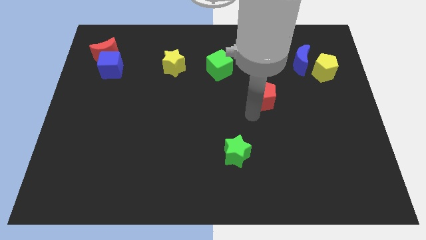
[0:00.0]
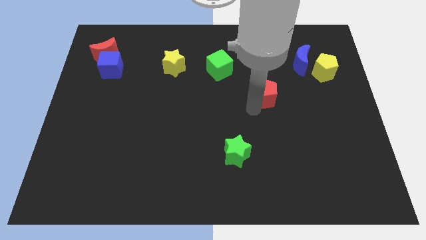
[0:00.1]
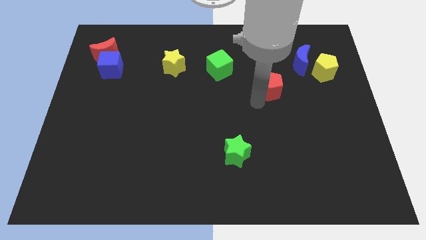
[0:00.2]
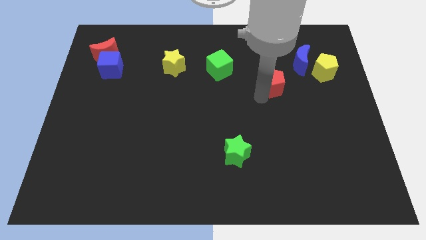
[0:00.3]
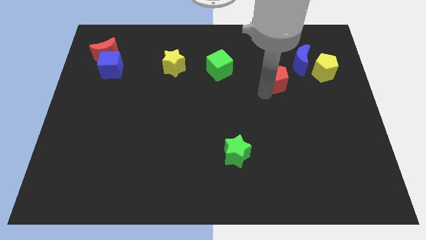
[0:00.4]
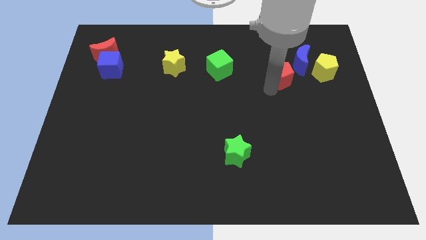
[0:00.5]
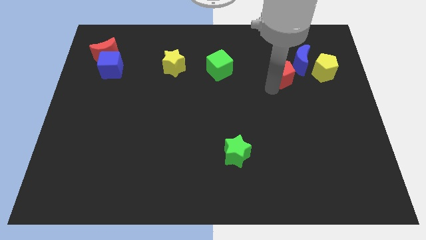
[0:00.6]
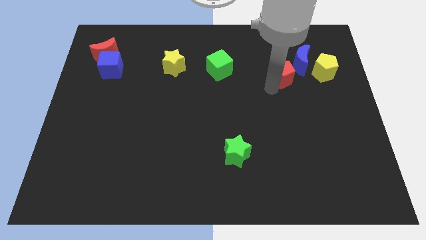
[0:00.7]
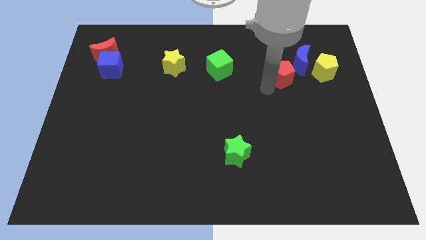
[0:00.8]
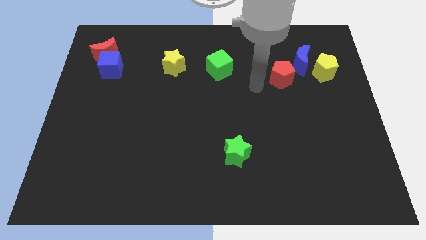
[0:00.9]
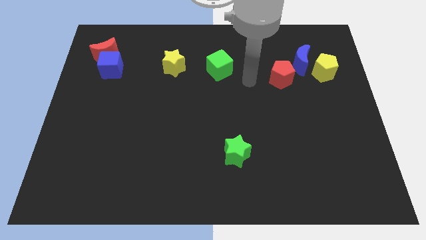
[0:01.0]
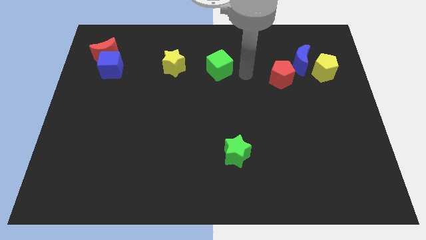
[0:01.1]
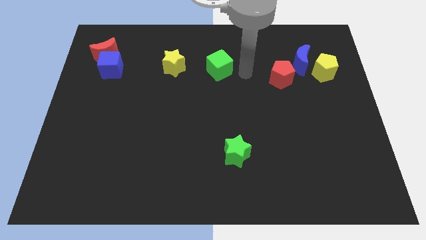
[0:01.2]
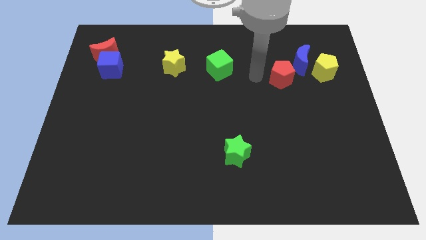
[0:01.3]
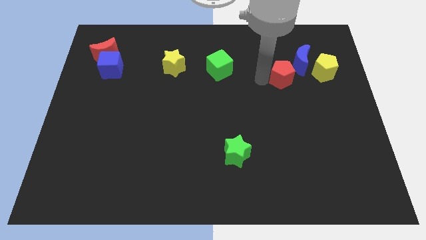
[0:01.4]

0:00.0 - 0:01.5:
move the red pentagon to the left of the blue crescent

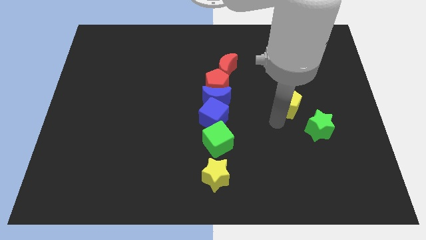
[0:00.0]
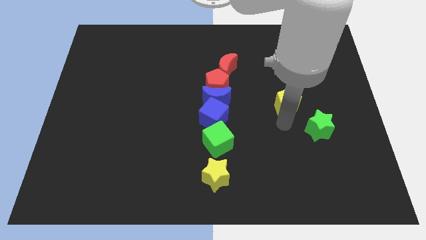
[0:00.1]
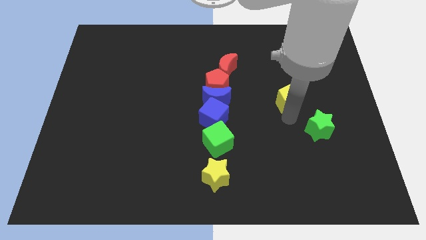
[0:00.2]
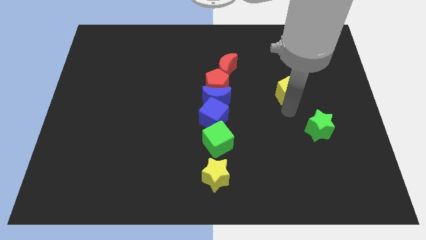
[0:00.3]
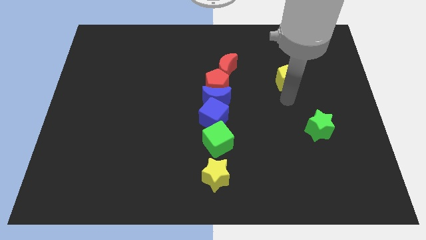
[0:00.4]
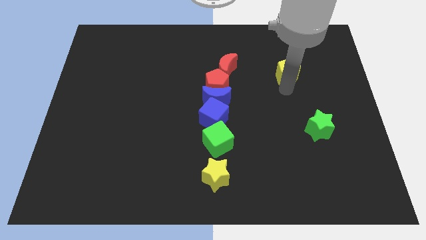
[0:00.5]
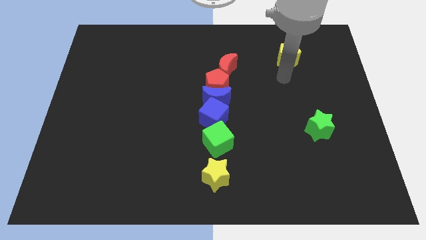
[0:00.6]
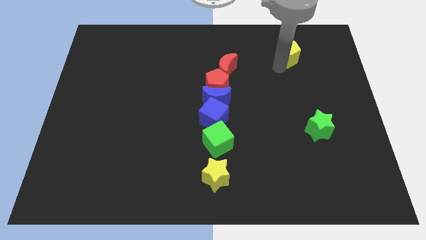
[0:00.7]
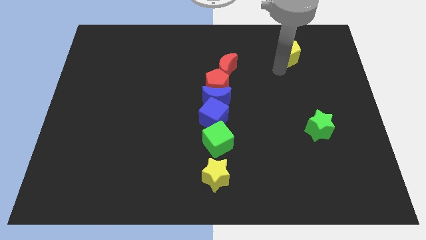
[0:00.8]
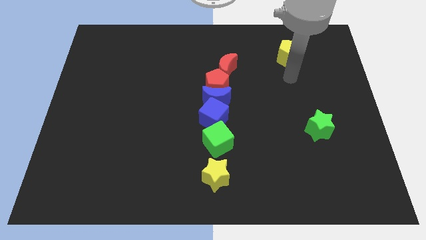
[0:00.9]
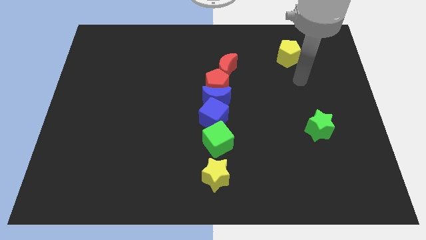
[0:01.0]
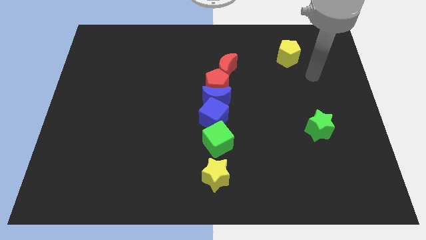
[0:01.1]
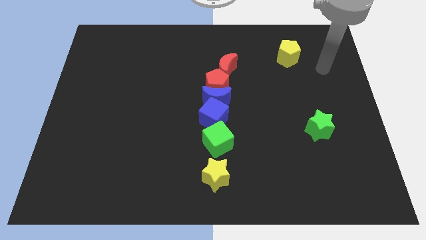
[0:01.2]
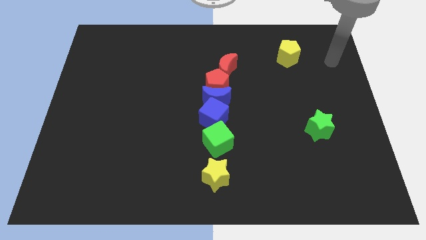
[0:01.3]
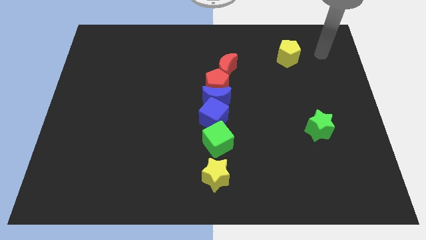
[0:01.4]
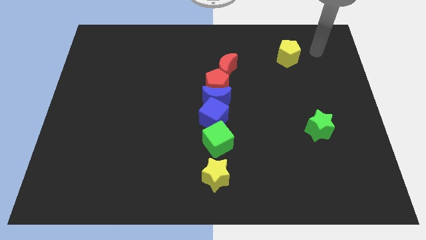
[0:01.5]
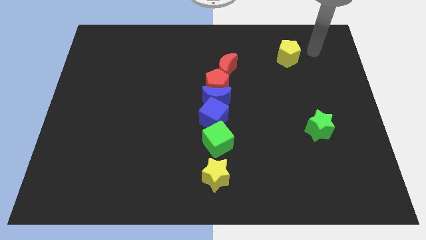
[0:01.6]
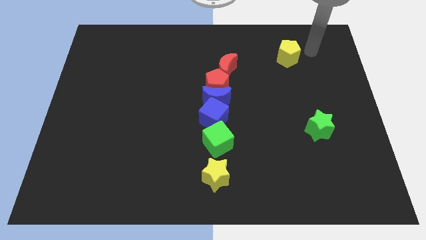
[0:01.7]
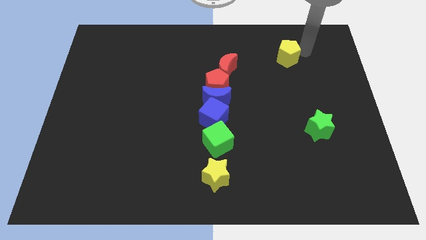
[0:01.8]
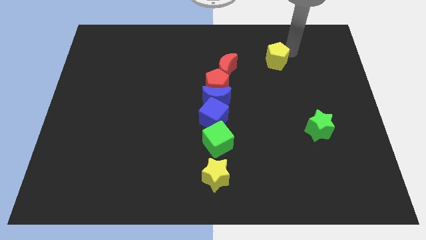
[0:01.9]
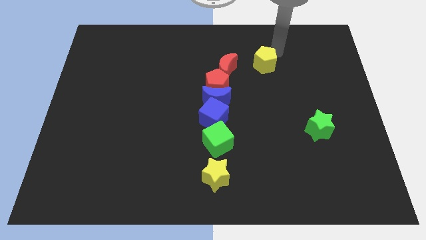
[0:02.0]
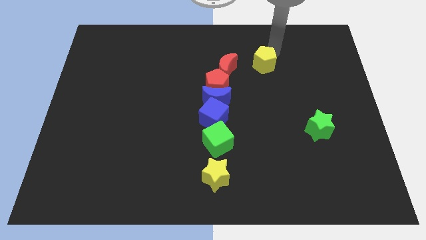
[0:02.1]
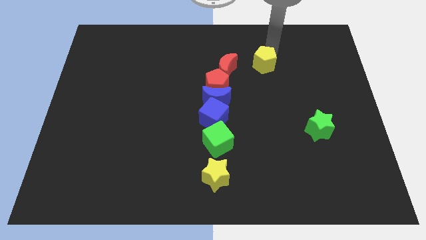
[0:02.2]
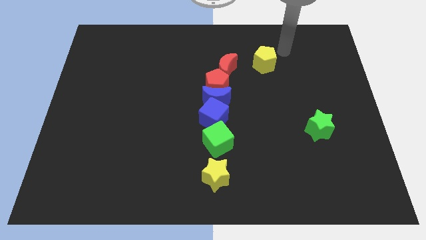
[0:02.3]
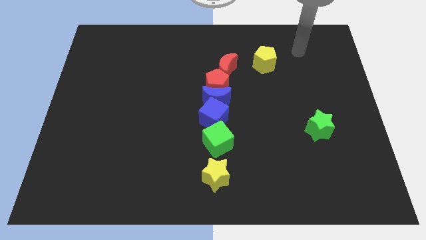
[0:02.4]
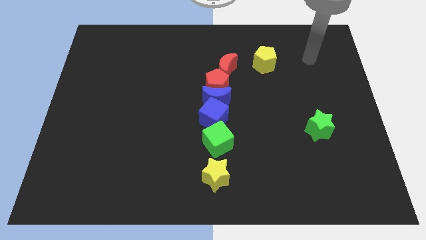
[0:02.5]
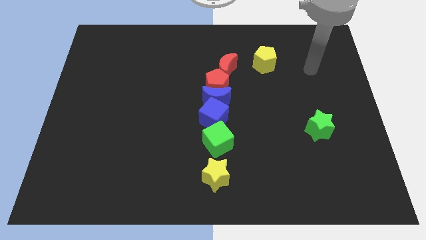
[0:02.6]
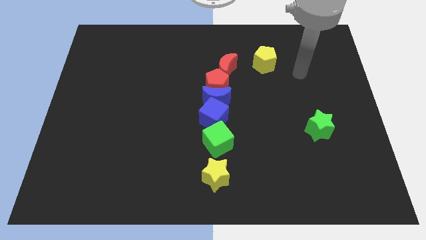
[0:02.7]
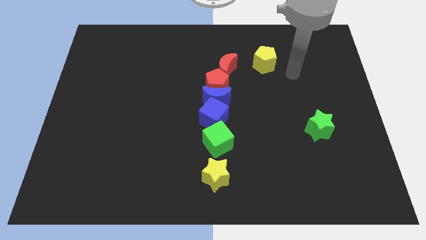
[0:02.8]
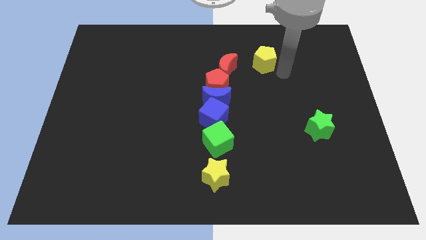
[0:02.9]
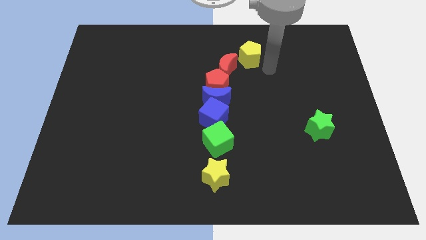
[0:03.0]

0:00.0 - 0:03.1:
slide the yellow pentagon towards the top right of the red crescent

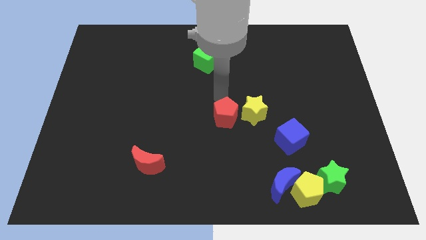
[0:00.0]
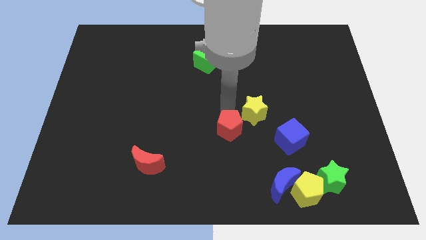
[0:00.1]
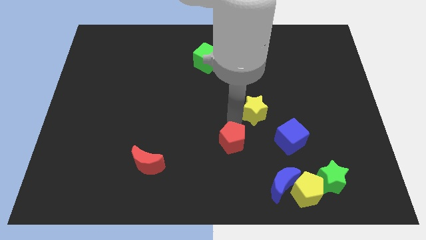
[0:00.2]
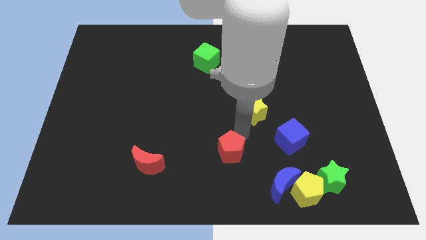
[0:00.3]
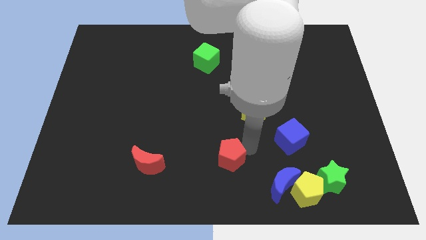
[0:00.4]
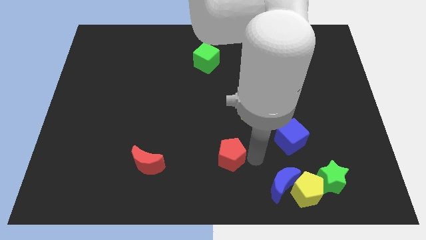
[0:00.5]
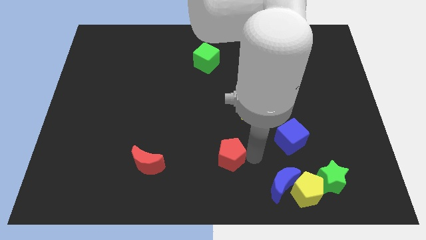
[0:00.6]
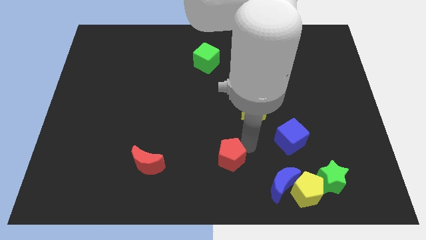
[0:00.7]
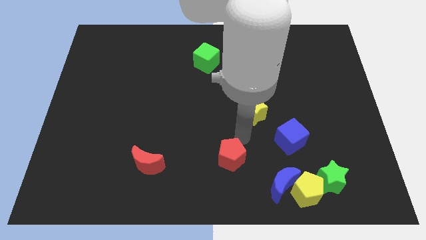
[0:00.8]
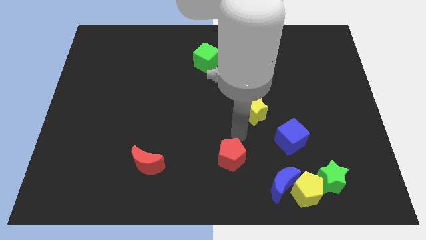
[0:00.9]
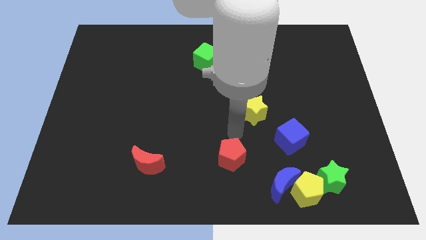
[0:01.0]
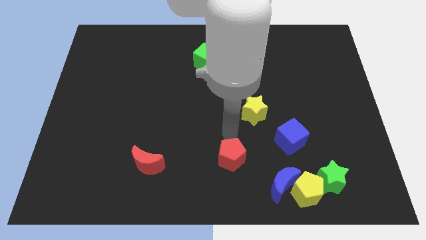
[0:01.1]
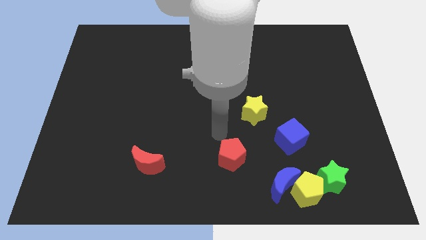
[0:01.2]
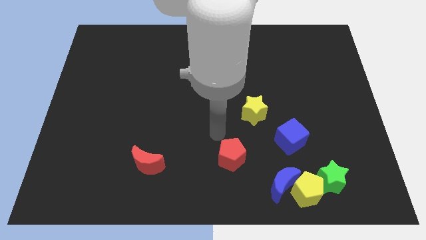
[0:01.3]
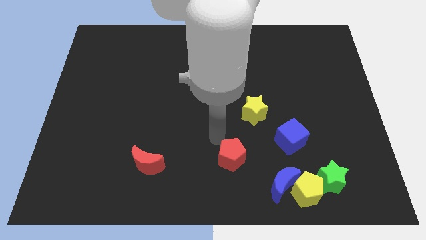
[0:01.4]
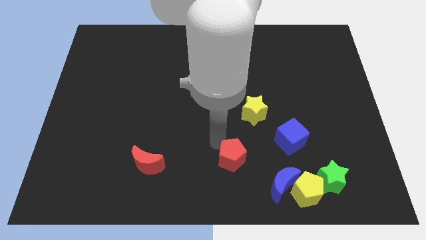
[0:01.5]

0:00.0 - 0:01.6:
put the red pentagon diagonally bottom left to the yellow star

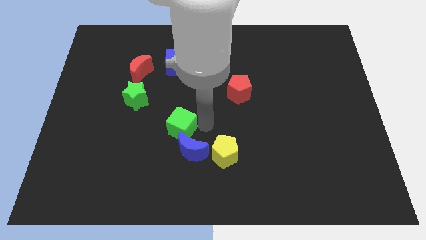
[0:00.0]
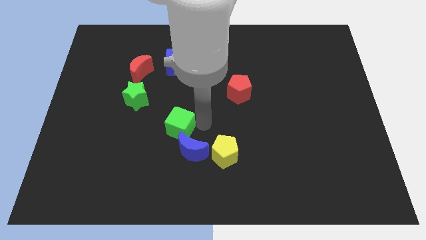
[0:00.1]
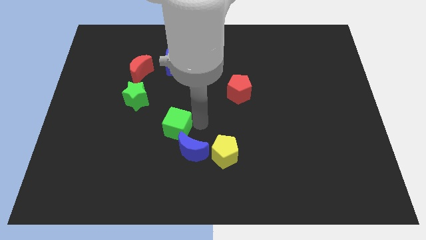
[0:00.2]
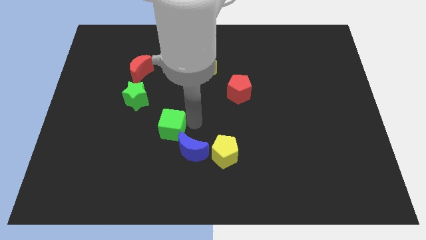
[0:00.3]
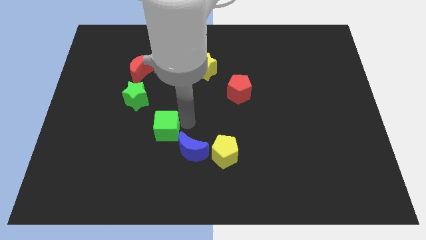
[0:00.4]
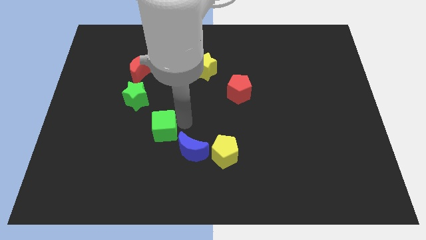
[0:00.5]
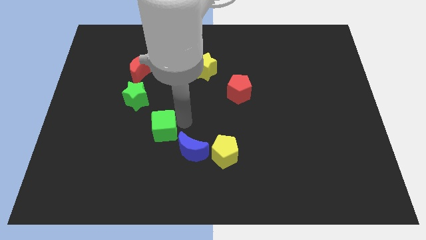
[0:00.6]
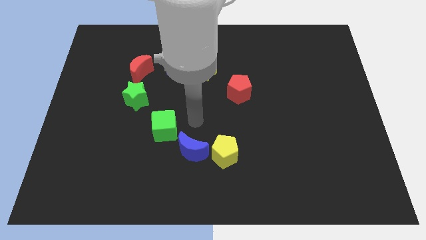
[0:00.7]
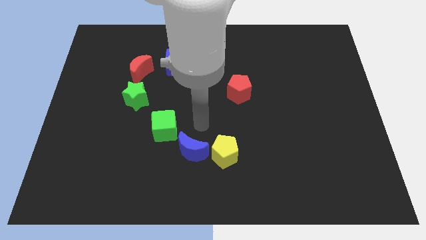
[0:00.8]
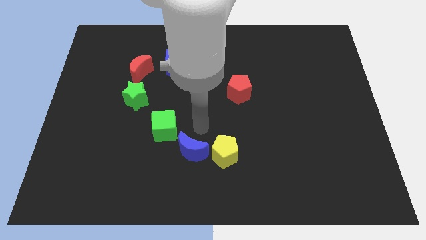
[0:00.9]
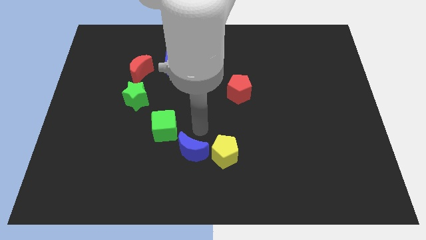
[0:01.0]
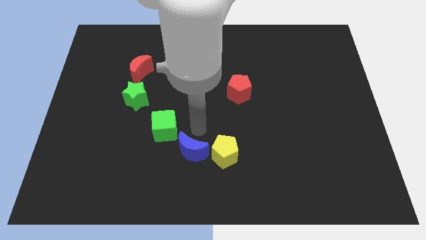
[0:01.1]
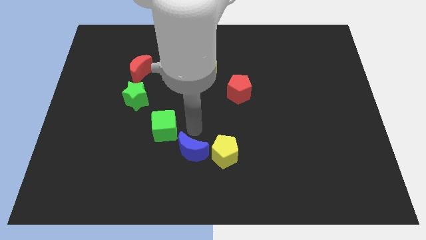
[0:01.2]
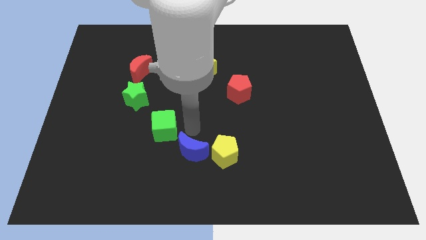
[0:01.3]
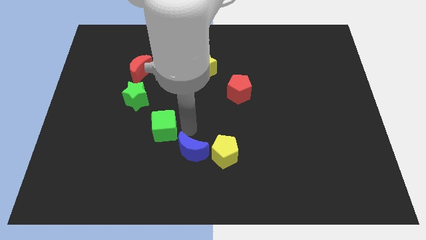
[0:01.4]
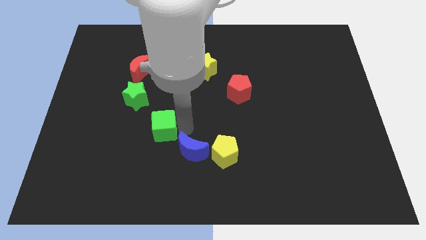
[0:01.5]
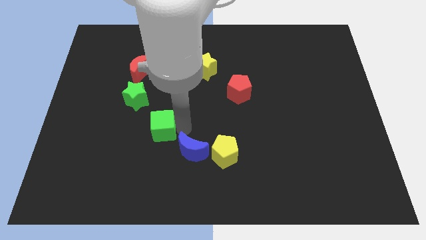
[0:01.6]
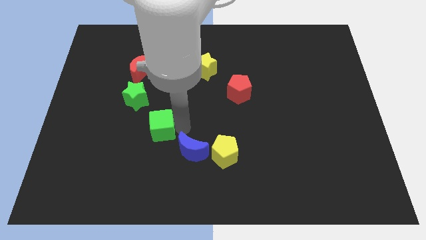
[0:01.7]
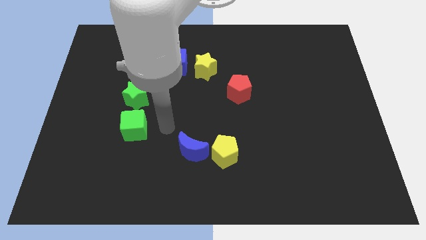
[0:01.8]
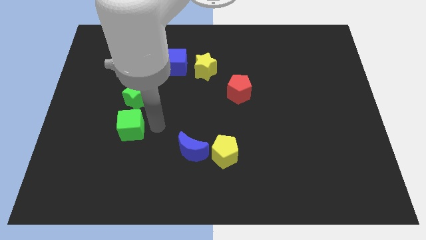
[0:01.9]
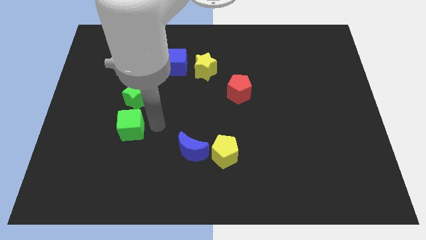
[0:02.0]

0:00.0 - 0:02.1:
move the green cube below the green star

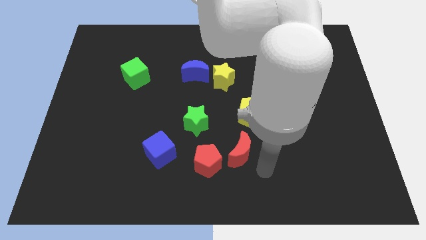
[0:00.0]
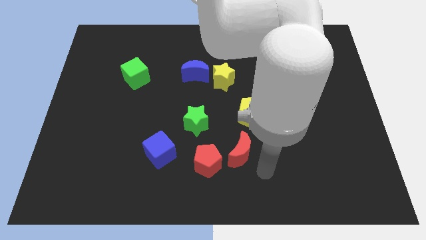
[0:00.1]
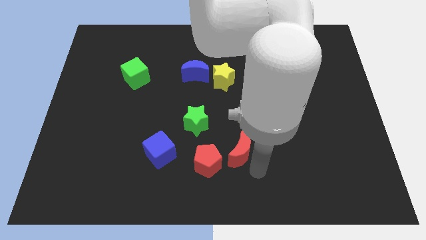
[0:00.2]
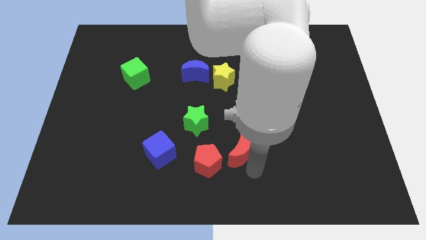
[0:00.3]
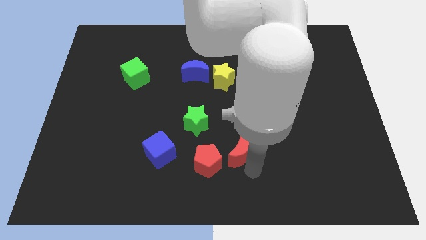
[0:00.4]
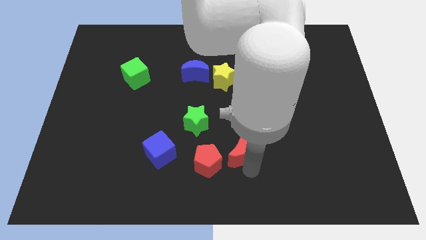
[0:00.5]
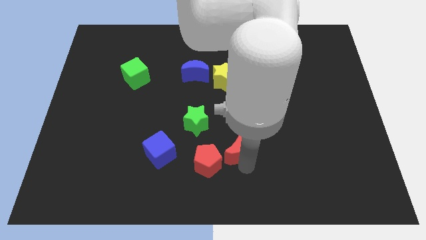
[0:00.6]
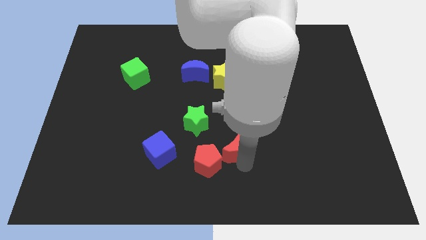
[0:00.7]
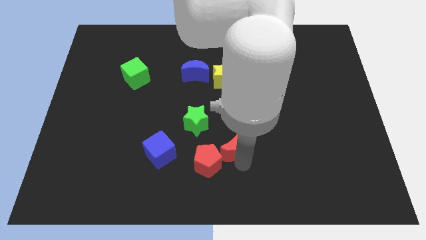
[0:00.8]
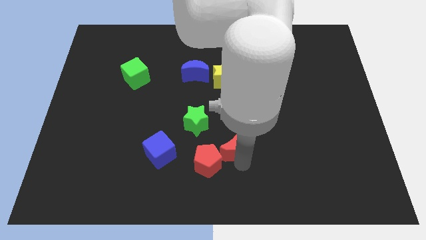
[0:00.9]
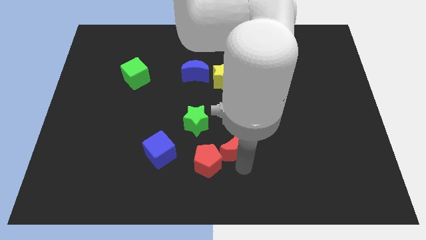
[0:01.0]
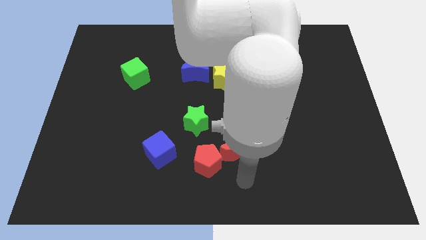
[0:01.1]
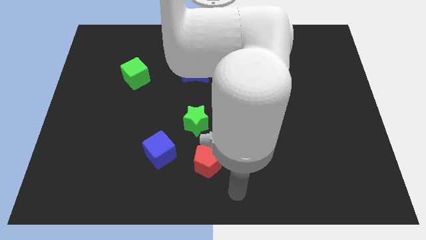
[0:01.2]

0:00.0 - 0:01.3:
move your arm to the right side of the red moon
